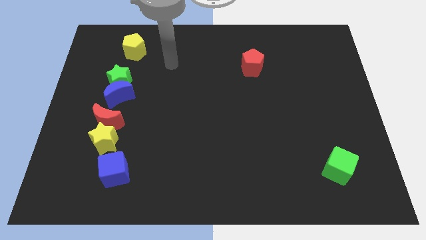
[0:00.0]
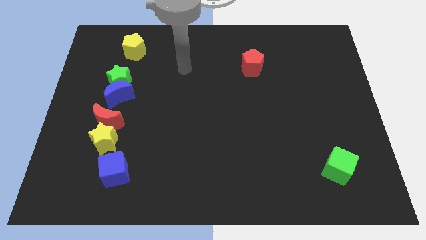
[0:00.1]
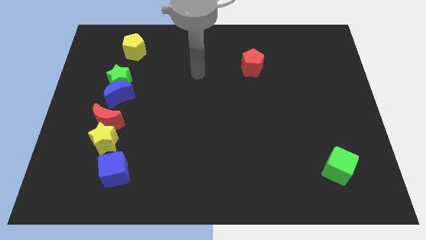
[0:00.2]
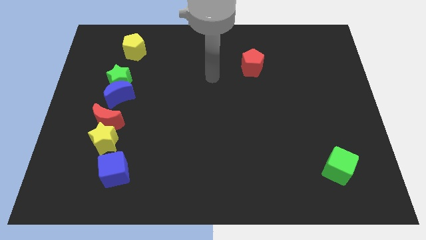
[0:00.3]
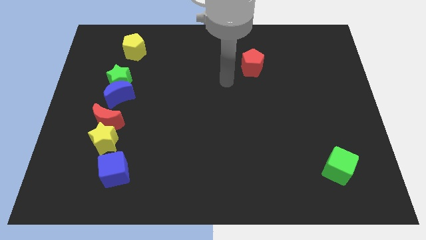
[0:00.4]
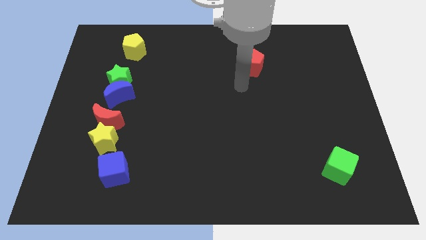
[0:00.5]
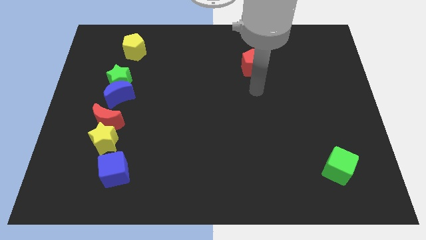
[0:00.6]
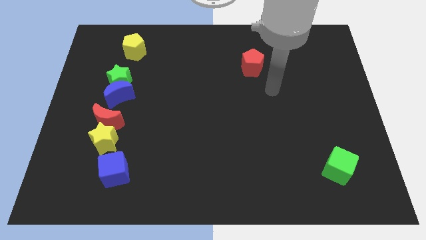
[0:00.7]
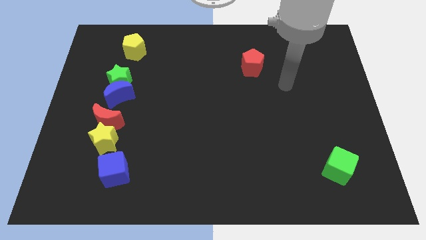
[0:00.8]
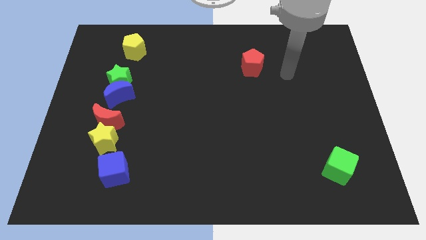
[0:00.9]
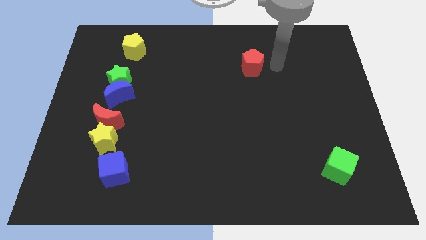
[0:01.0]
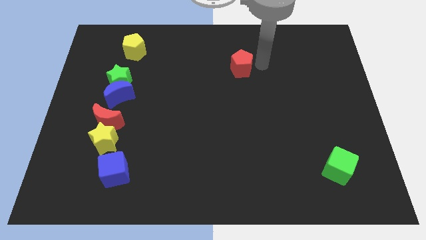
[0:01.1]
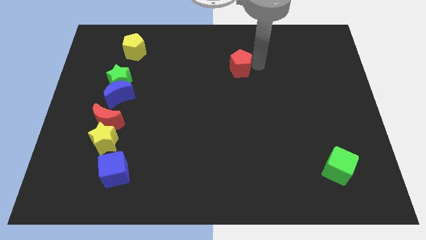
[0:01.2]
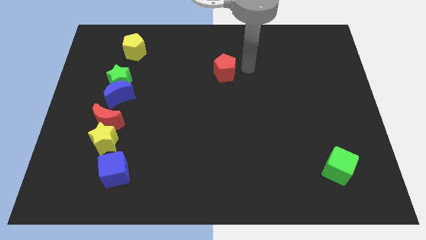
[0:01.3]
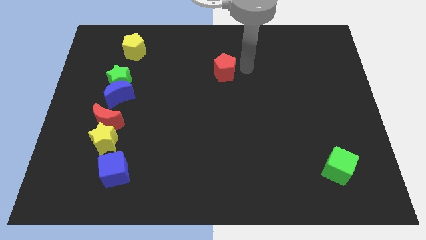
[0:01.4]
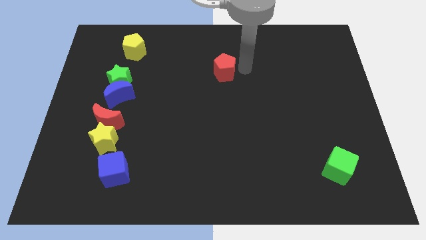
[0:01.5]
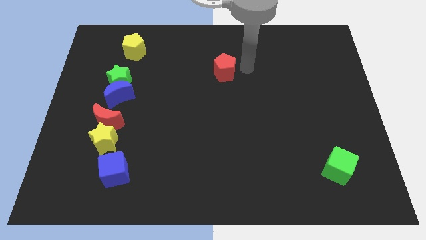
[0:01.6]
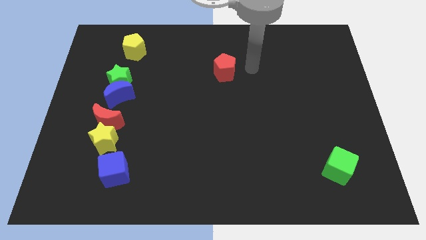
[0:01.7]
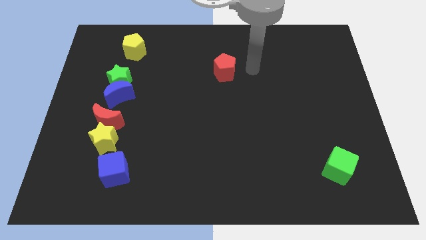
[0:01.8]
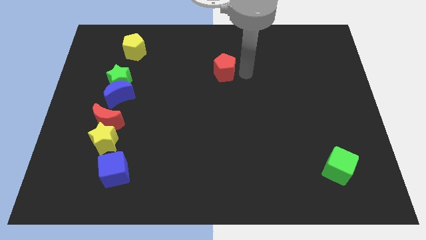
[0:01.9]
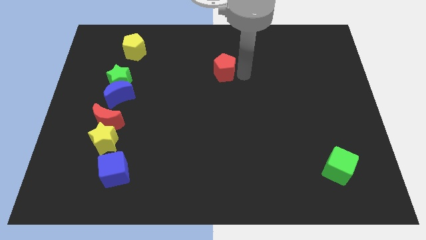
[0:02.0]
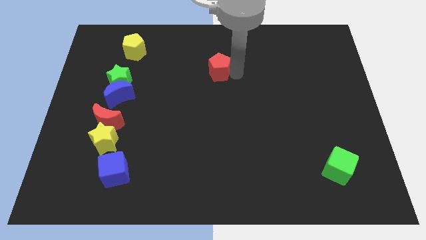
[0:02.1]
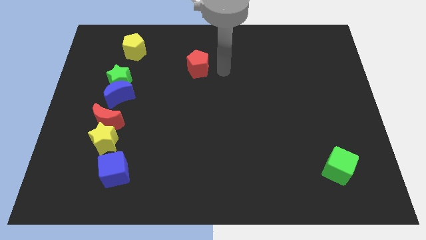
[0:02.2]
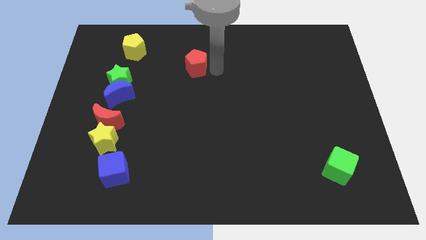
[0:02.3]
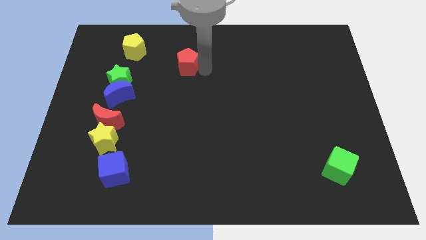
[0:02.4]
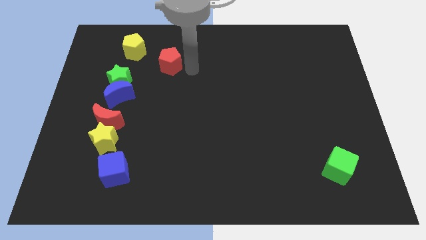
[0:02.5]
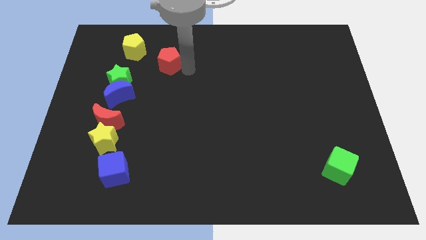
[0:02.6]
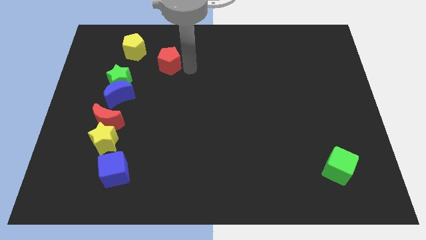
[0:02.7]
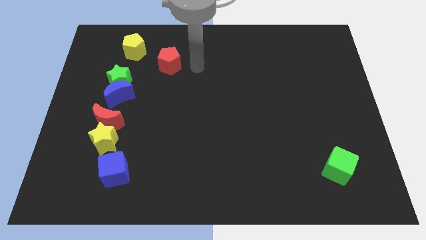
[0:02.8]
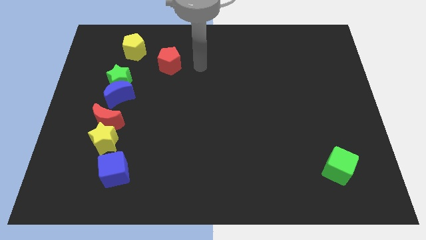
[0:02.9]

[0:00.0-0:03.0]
slide the red pentagon towards the green star

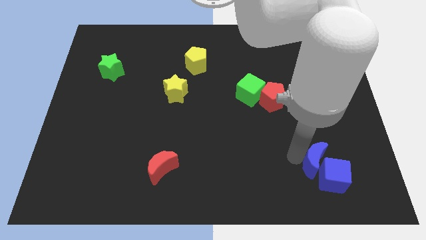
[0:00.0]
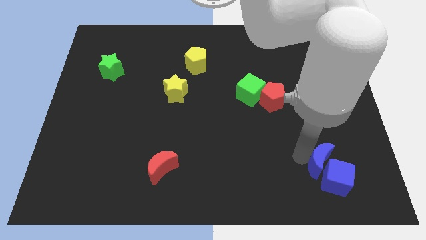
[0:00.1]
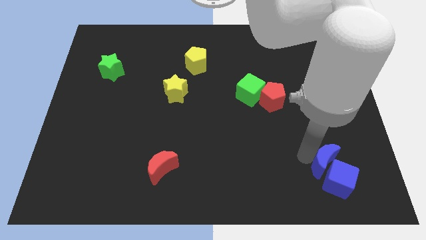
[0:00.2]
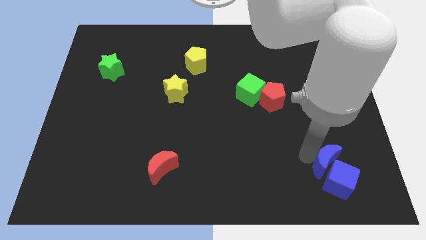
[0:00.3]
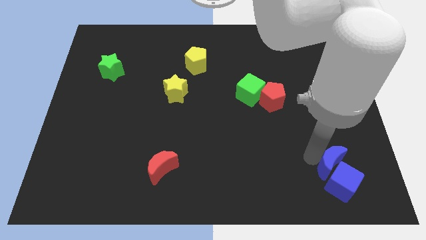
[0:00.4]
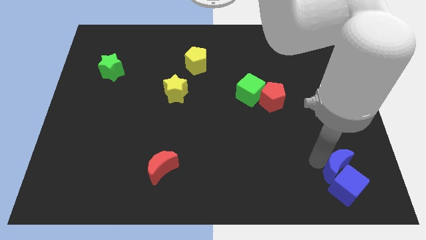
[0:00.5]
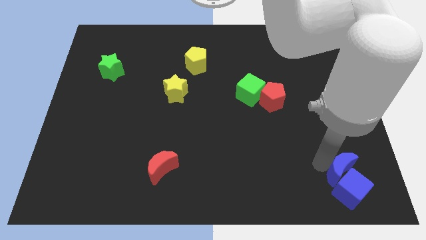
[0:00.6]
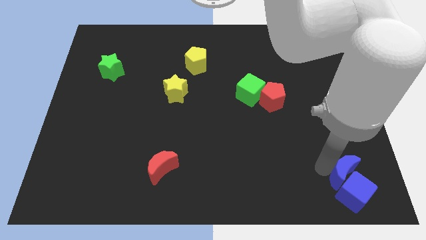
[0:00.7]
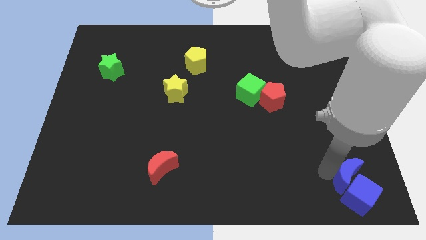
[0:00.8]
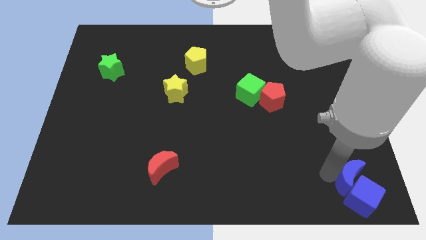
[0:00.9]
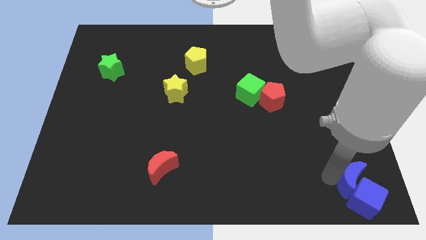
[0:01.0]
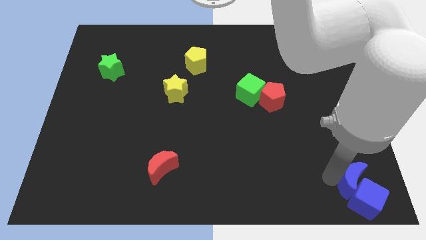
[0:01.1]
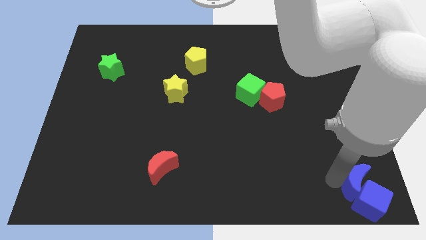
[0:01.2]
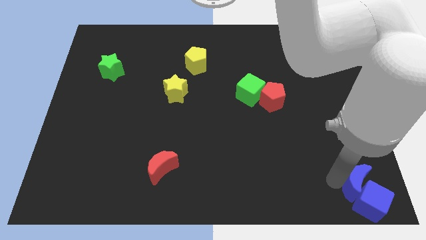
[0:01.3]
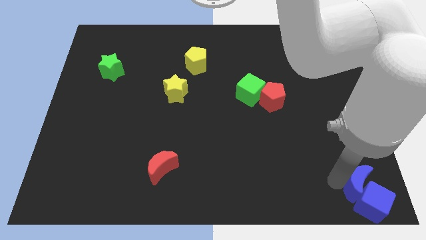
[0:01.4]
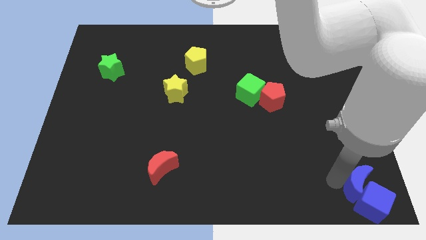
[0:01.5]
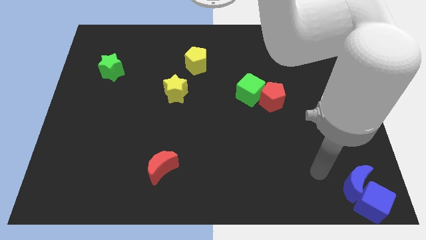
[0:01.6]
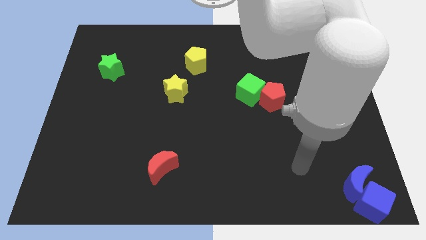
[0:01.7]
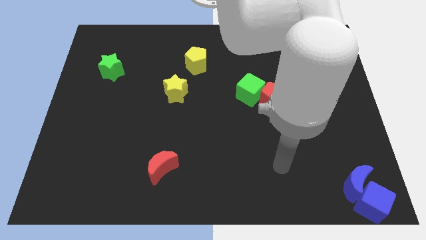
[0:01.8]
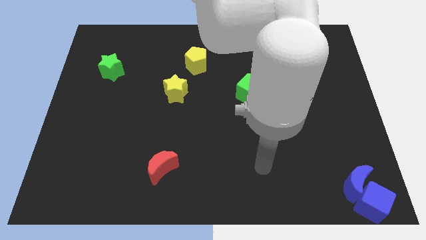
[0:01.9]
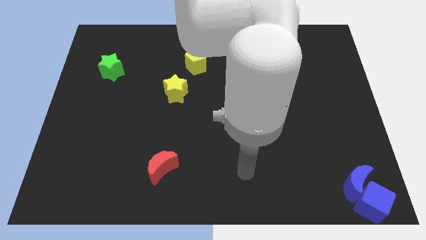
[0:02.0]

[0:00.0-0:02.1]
push the both the blue blocks to the bottom right corner of teh board

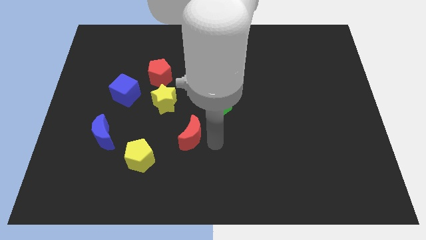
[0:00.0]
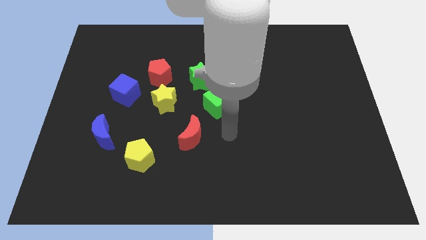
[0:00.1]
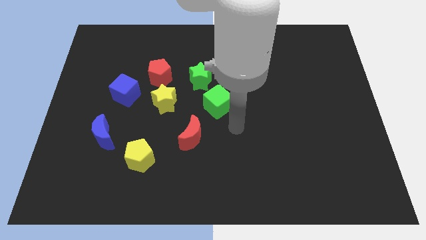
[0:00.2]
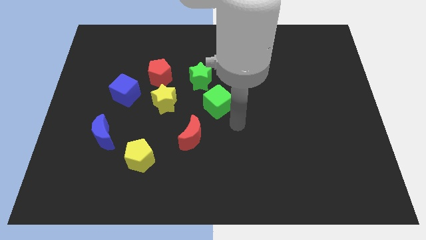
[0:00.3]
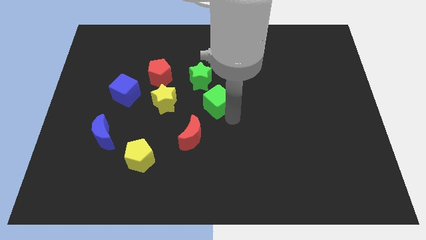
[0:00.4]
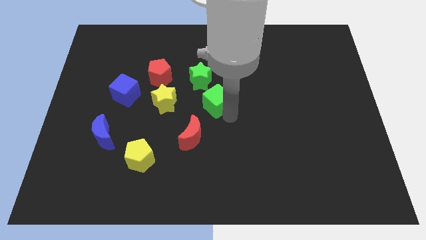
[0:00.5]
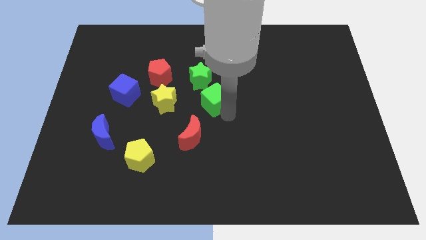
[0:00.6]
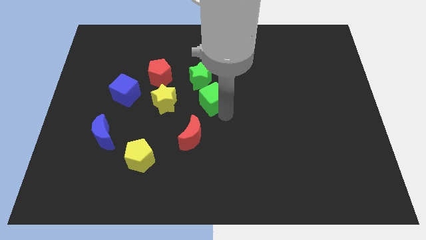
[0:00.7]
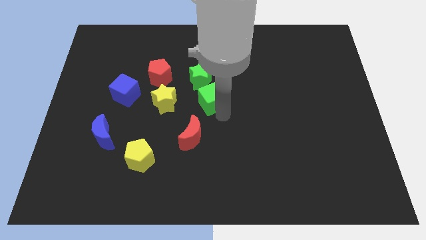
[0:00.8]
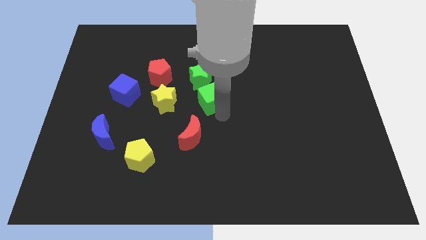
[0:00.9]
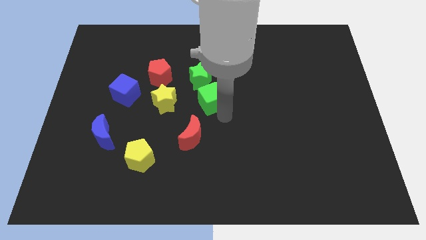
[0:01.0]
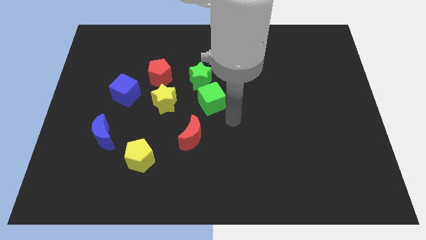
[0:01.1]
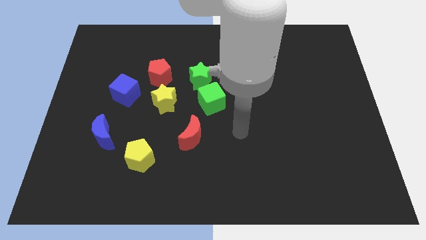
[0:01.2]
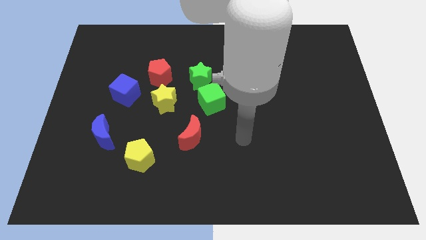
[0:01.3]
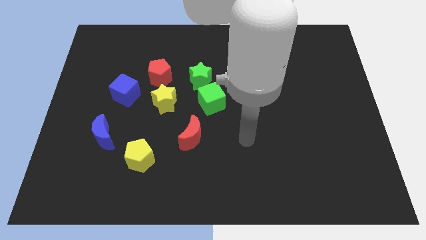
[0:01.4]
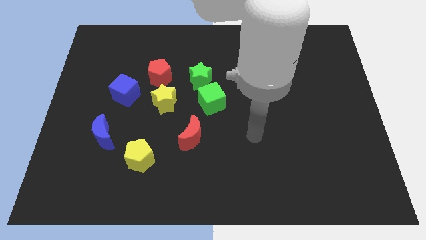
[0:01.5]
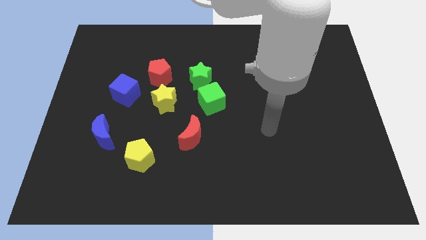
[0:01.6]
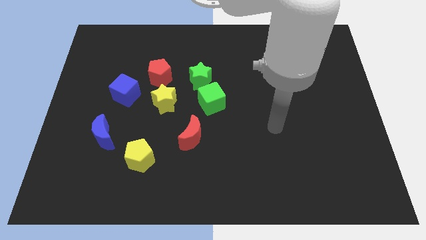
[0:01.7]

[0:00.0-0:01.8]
push the green cube below green star

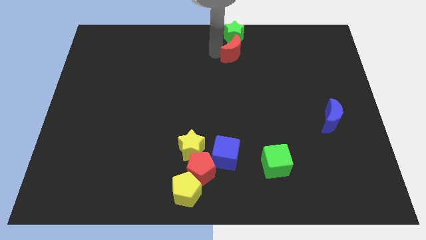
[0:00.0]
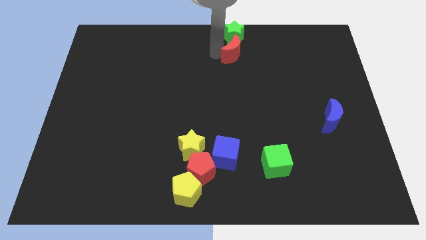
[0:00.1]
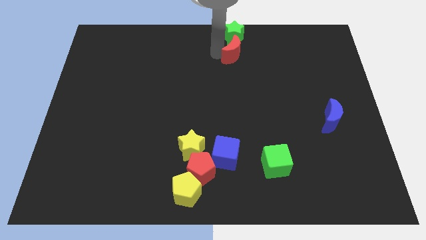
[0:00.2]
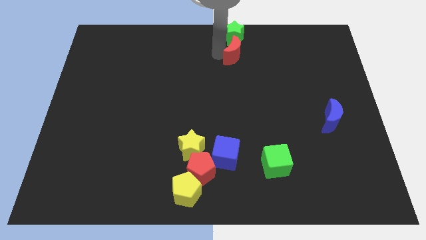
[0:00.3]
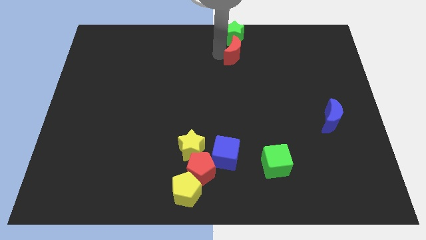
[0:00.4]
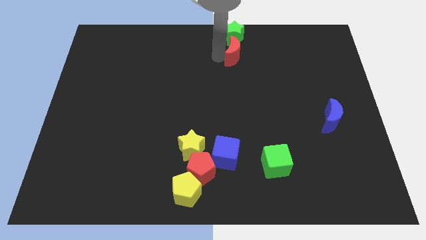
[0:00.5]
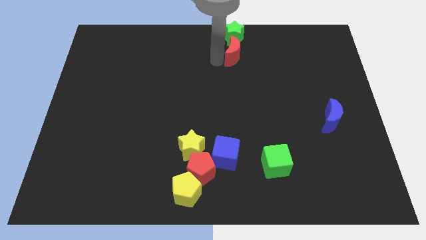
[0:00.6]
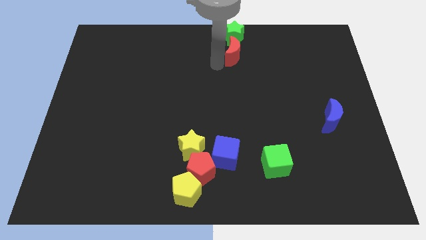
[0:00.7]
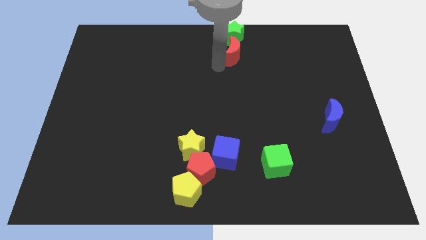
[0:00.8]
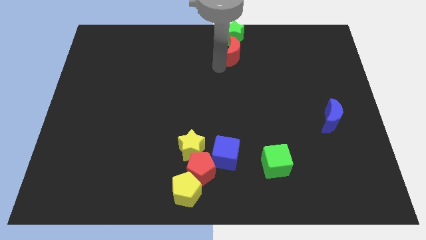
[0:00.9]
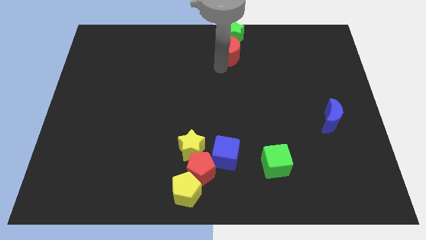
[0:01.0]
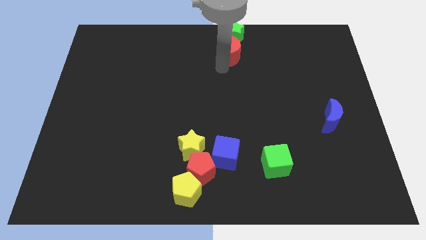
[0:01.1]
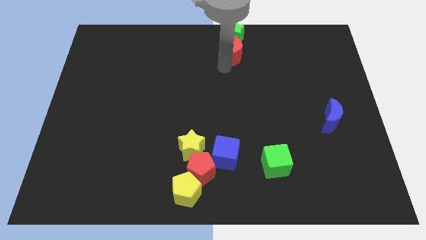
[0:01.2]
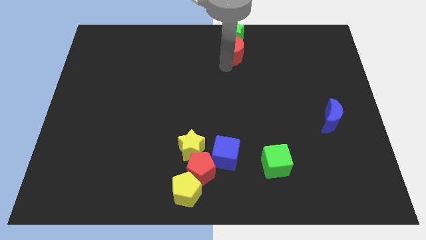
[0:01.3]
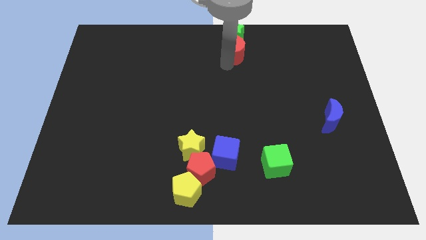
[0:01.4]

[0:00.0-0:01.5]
adjust the red moon on the bottom of green star

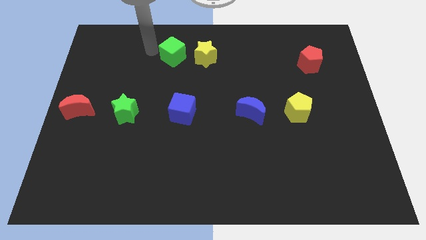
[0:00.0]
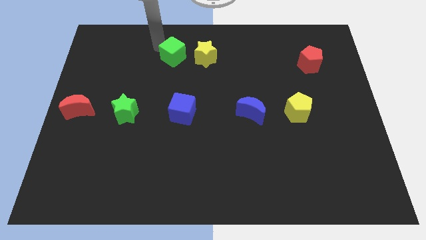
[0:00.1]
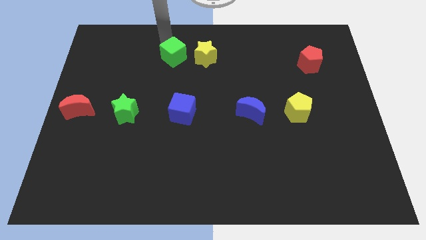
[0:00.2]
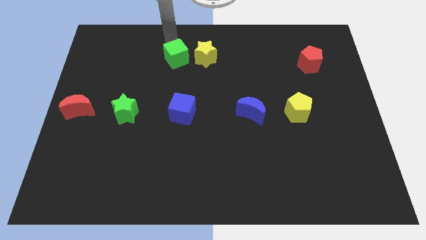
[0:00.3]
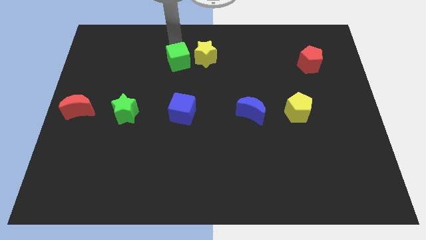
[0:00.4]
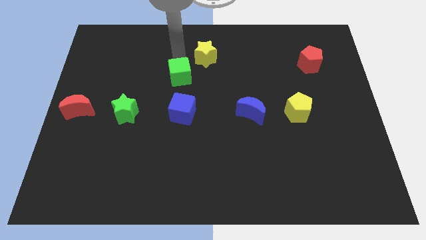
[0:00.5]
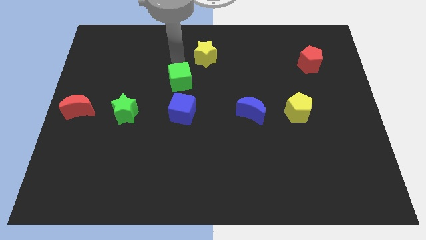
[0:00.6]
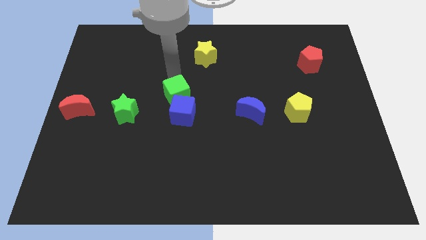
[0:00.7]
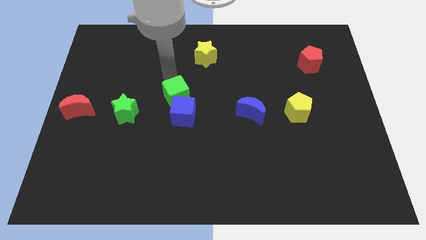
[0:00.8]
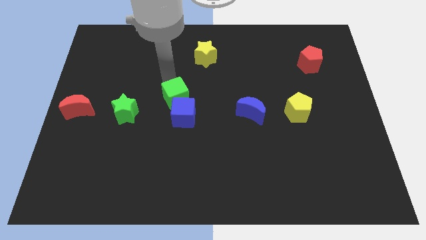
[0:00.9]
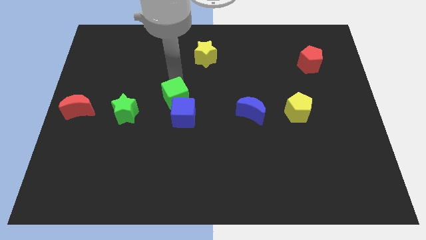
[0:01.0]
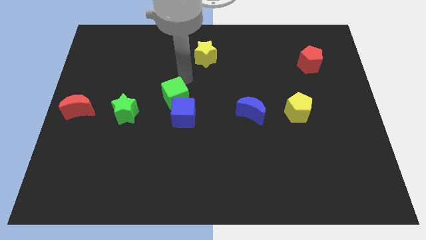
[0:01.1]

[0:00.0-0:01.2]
push the green cube into the blue cube
